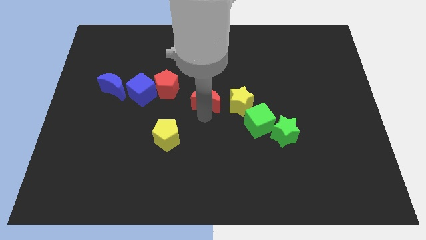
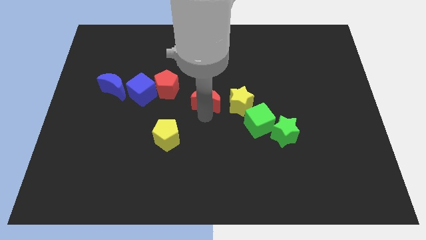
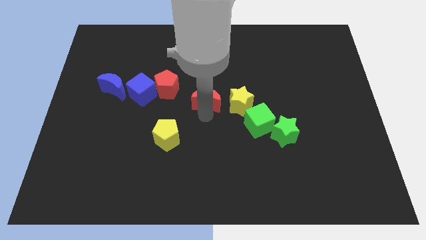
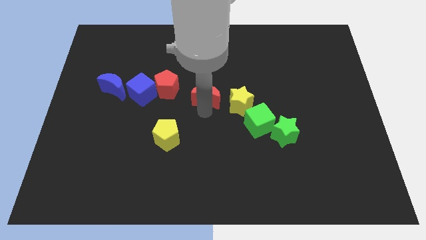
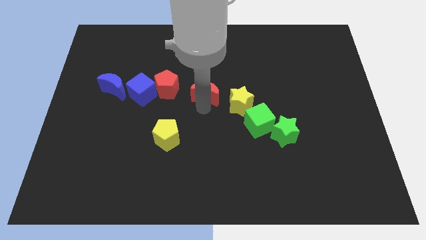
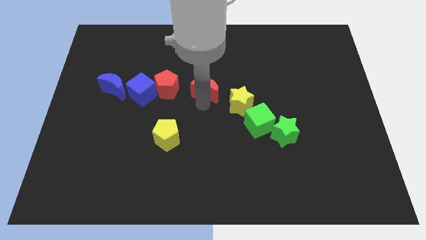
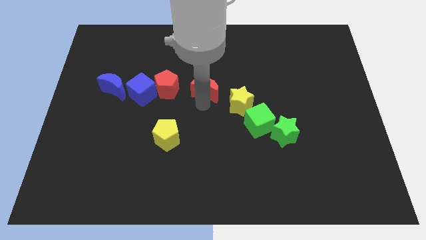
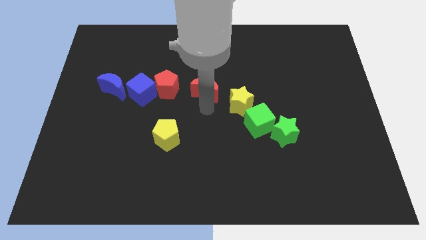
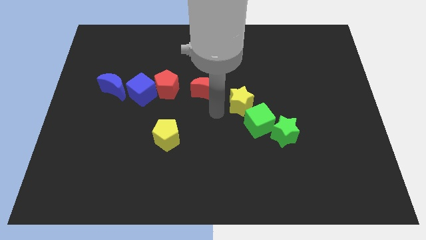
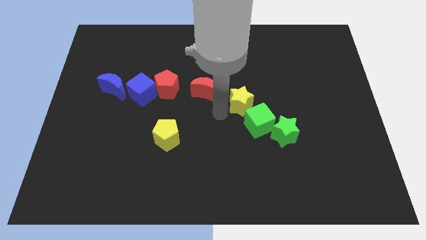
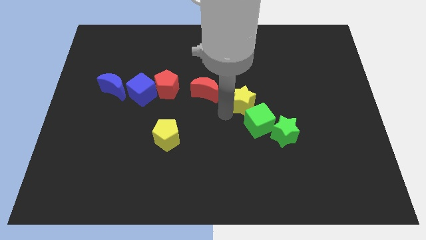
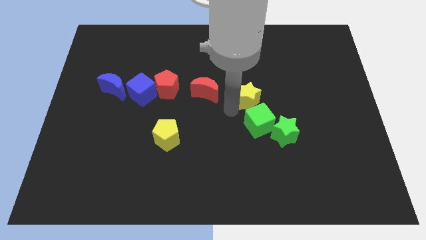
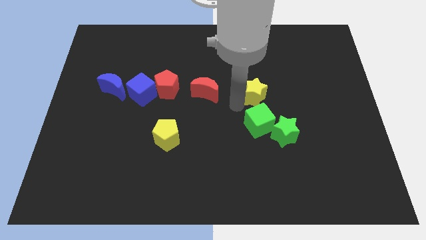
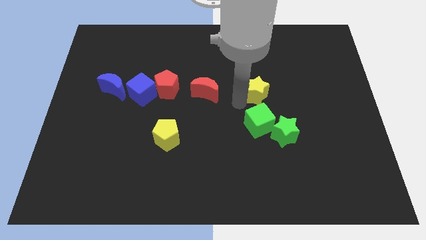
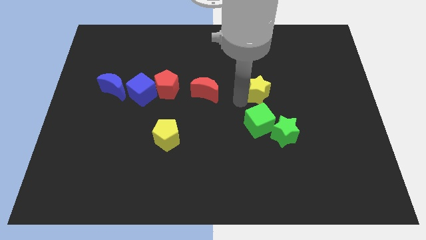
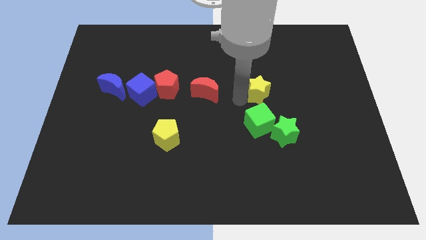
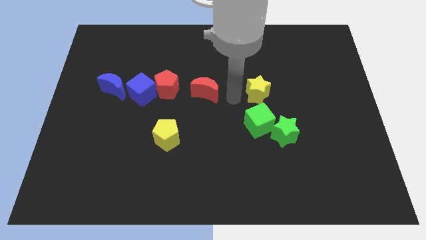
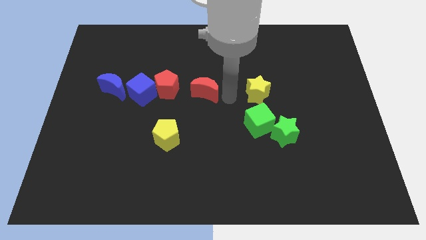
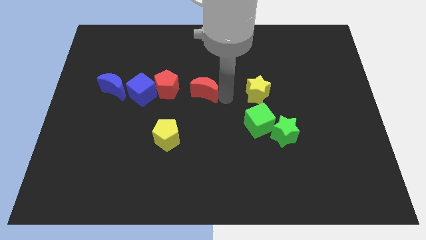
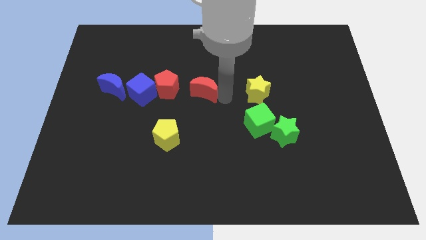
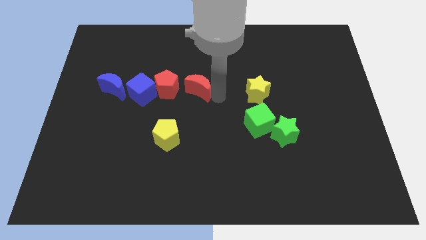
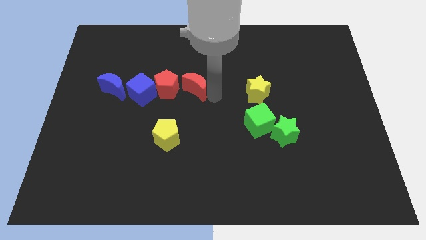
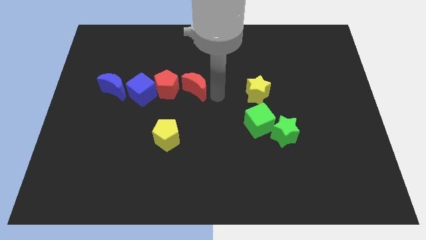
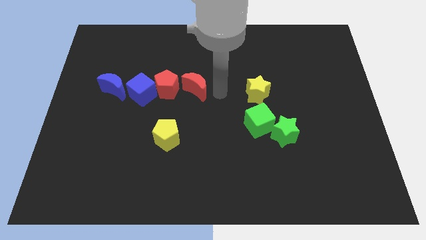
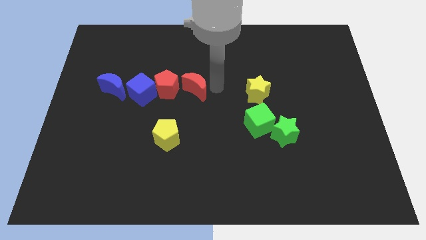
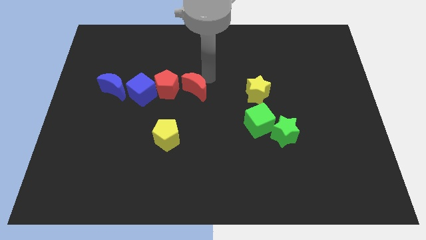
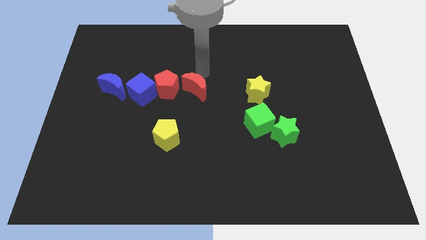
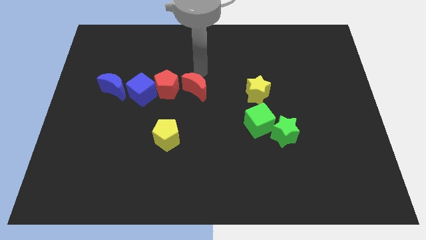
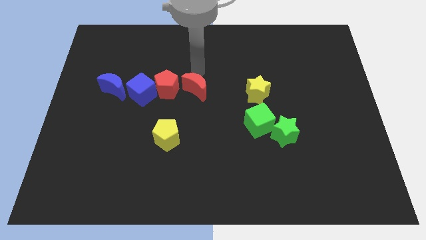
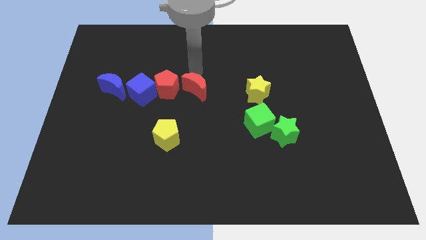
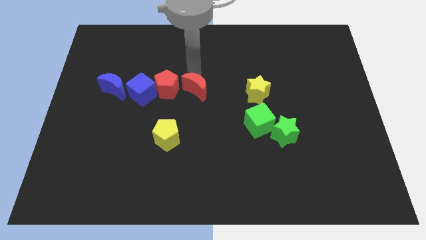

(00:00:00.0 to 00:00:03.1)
place the red moon next to the red pentagon

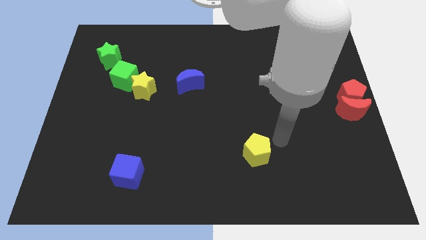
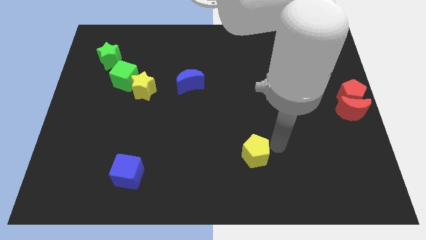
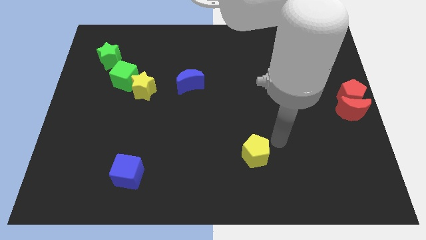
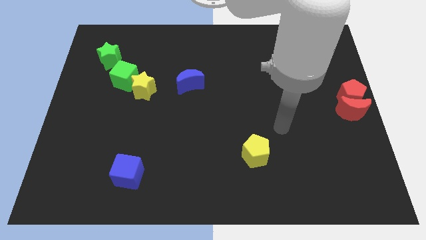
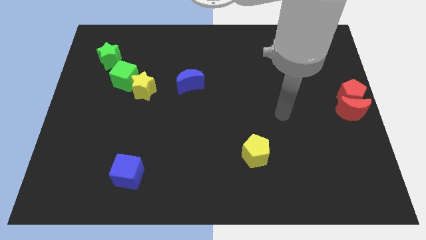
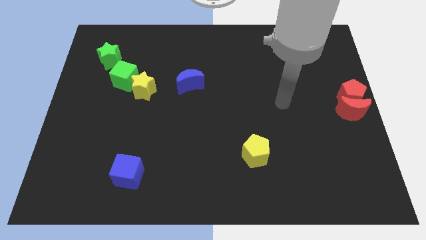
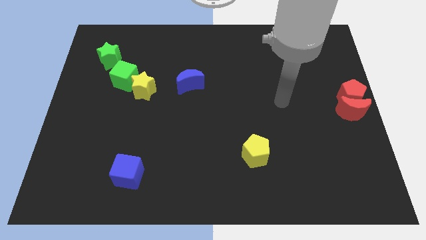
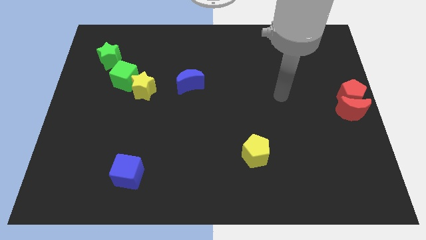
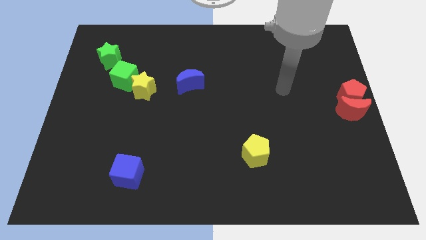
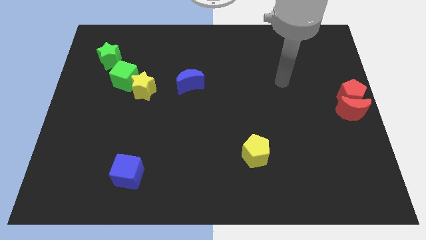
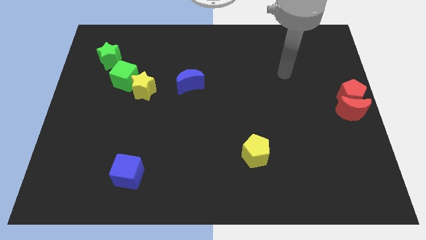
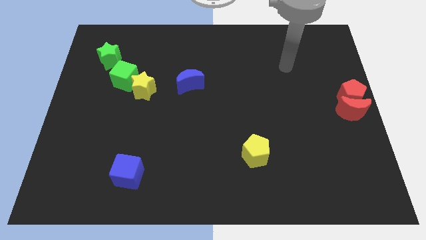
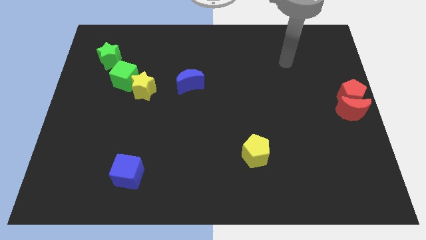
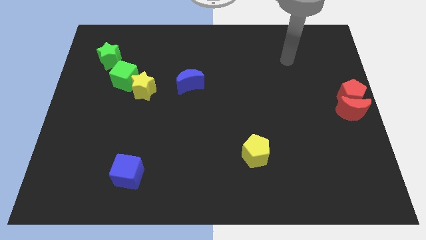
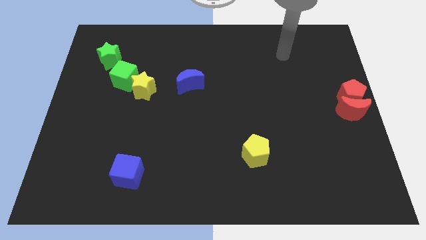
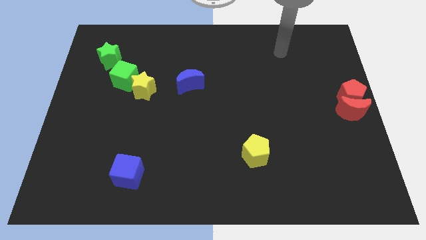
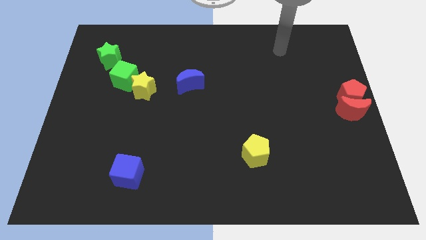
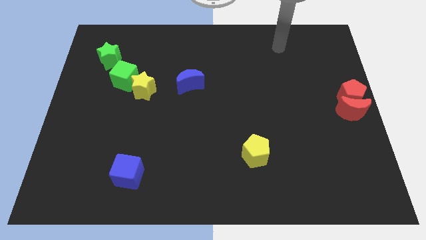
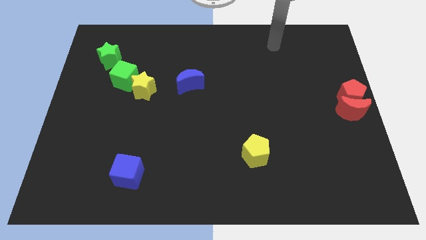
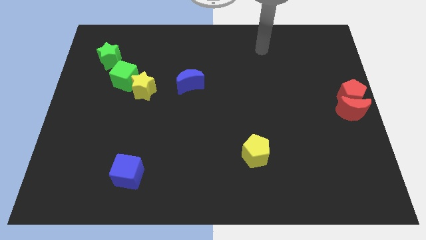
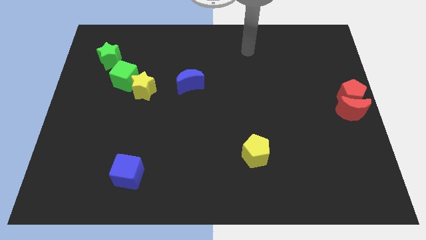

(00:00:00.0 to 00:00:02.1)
move your arm away from the yellow pentagon

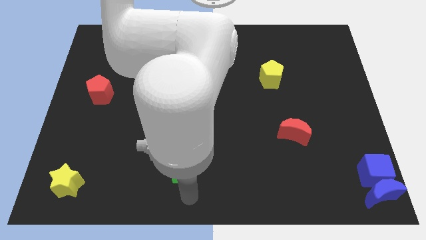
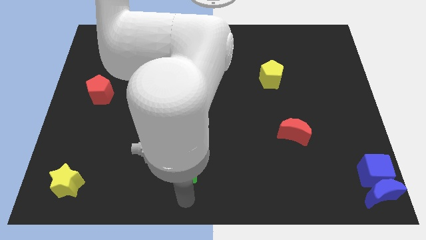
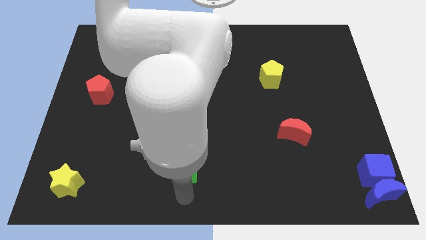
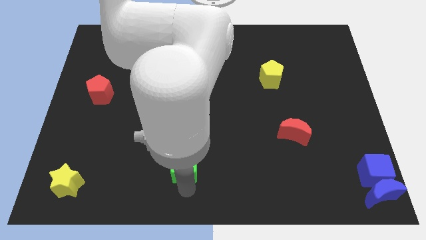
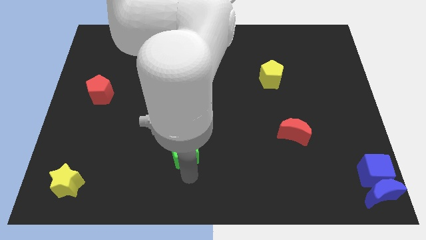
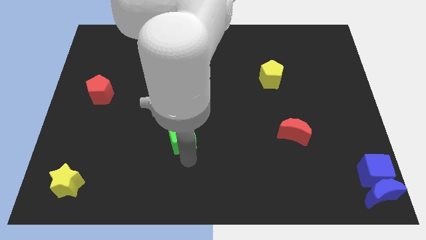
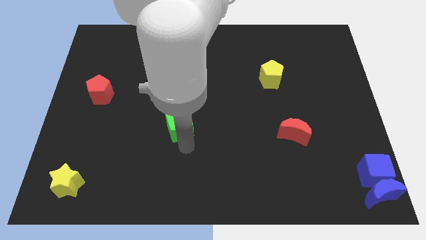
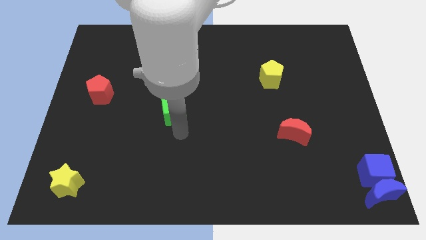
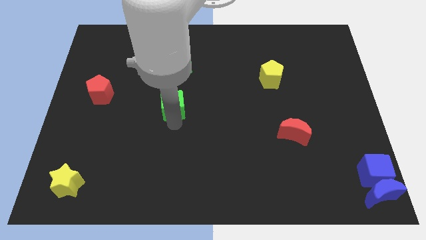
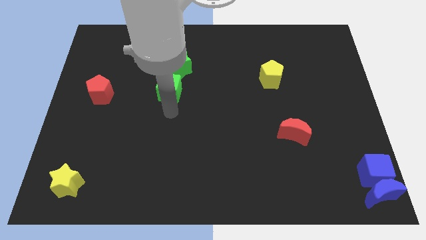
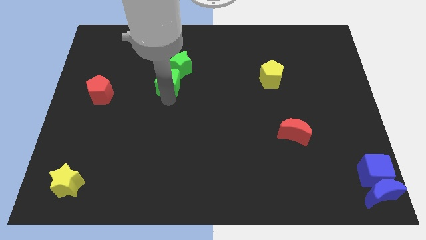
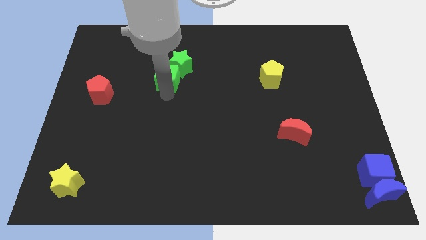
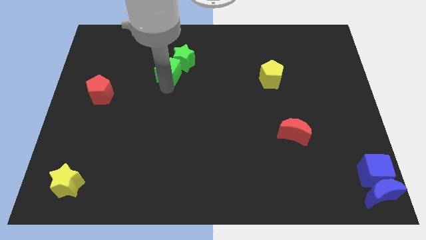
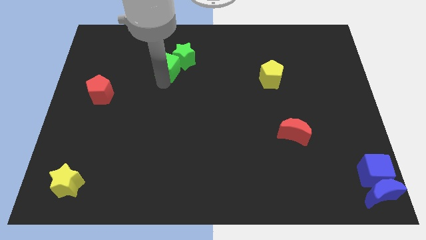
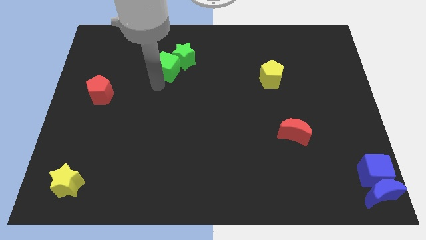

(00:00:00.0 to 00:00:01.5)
move green cube into green star

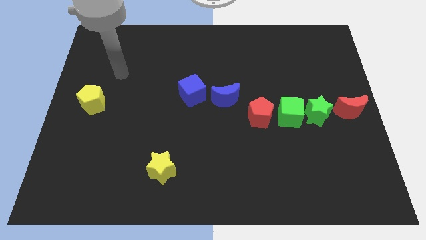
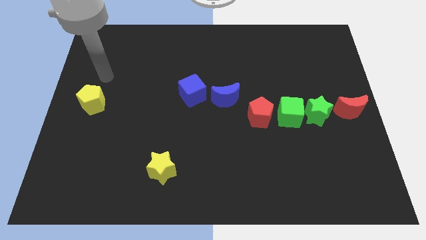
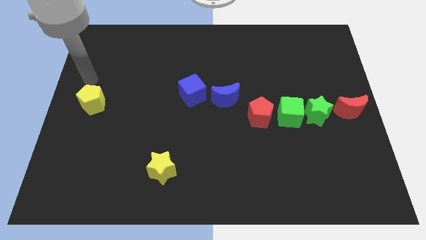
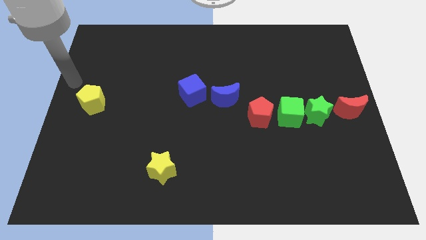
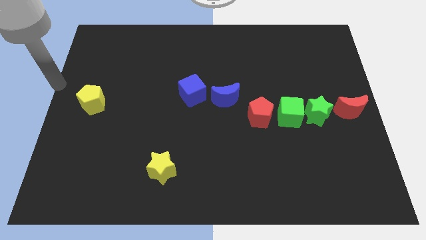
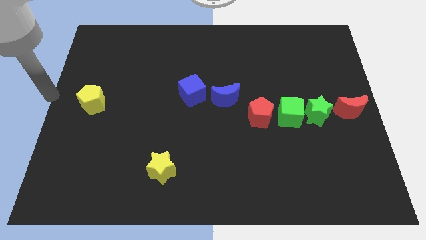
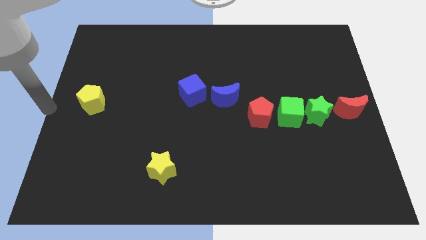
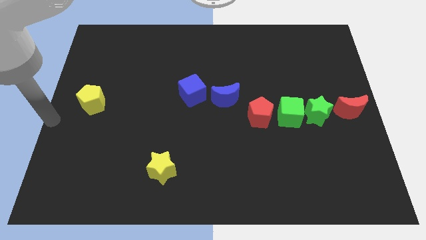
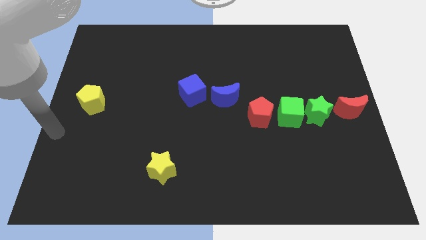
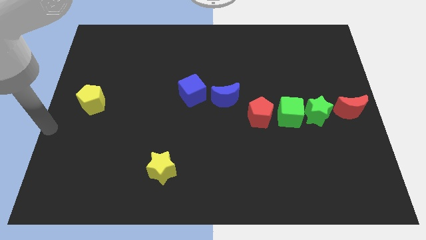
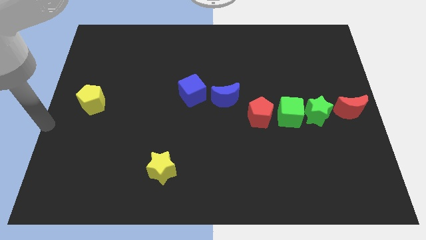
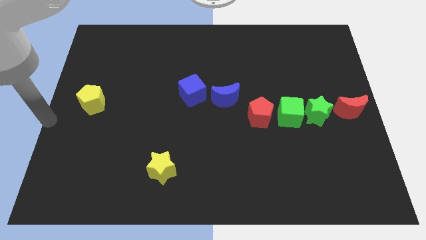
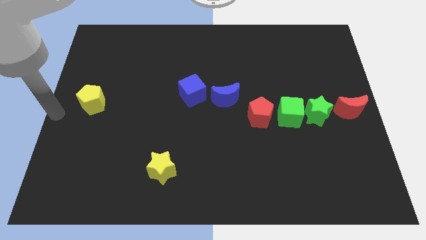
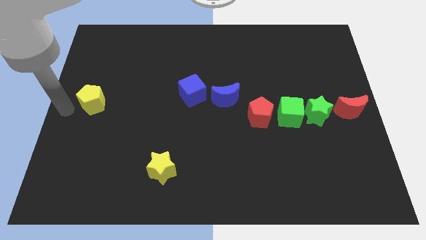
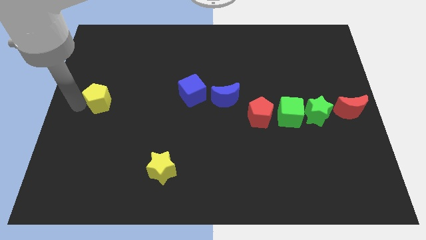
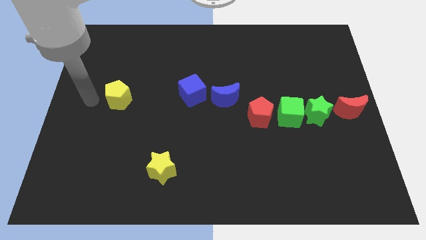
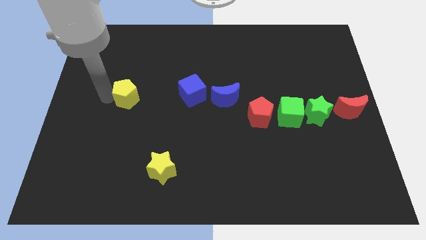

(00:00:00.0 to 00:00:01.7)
move the yellow pentagon towards the blue cube

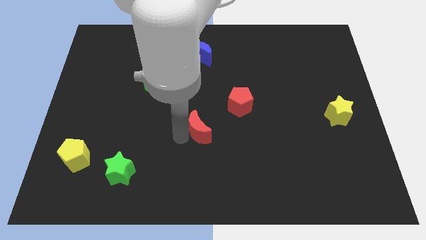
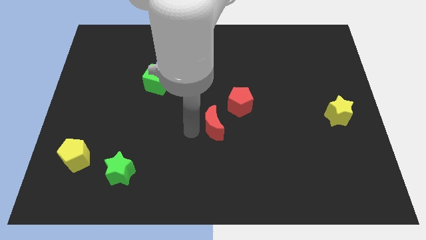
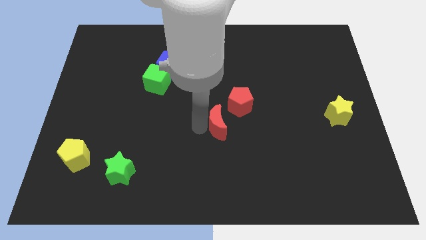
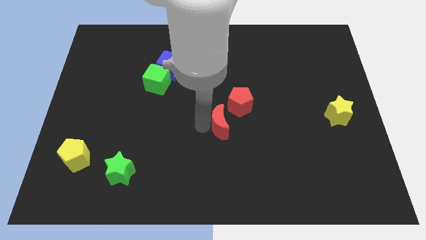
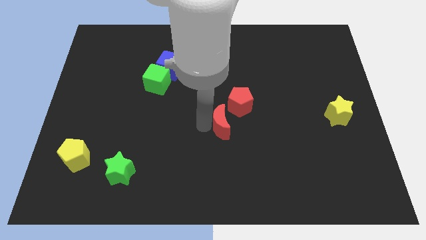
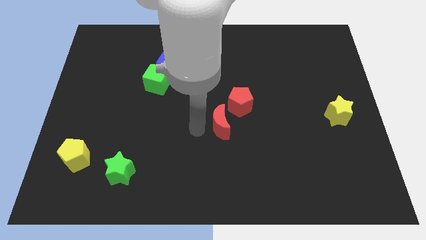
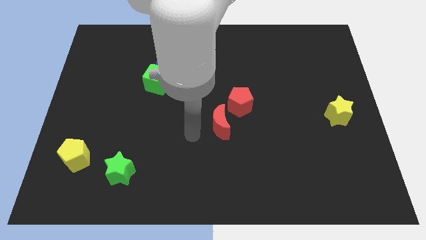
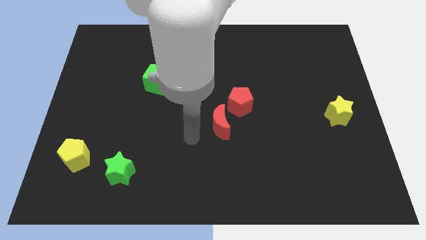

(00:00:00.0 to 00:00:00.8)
move red moon towards red pentagon
